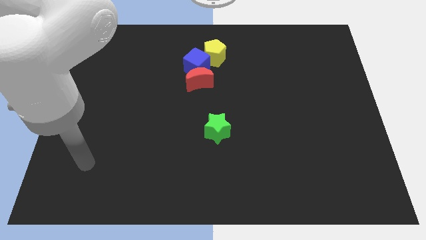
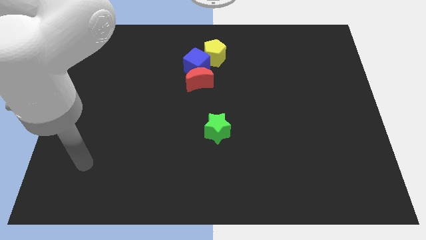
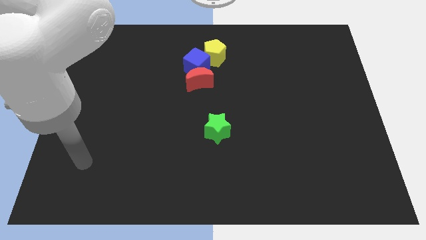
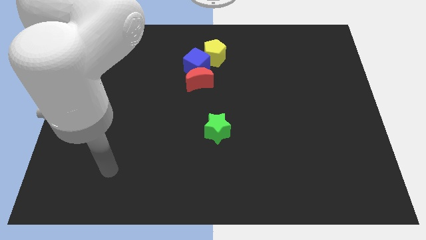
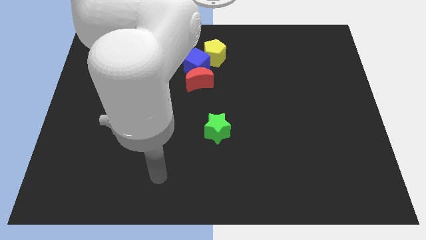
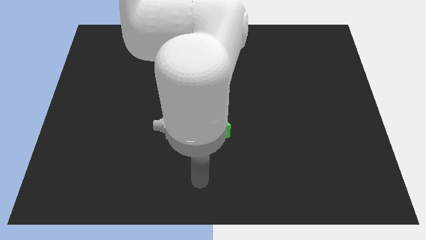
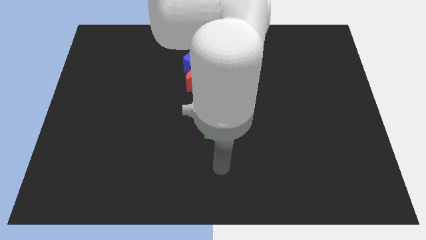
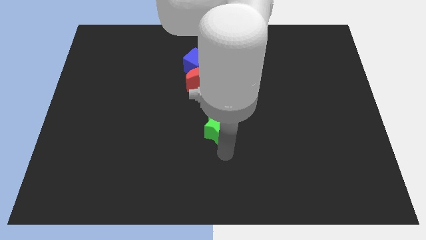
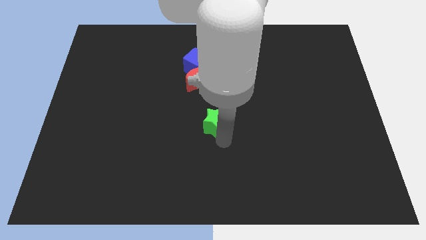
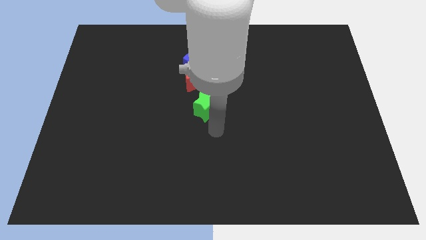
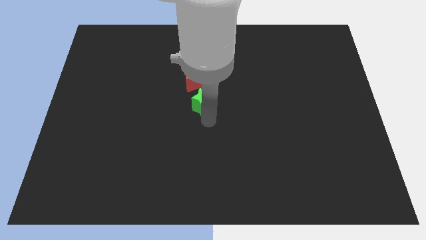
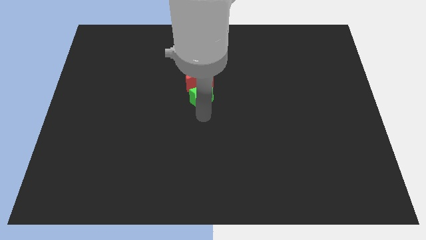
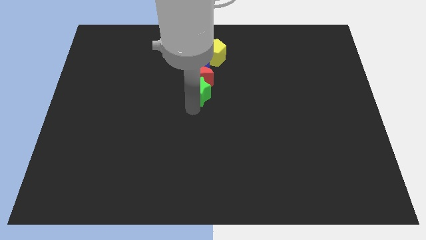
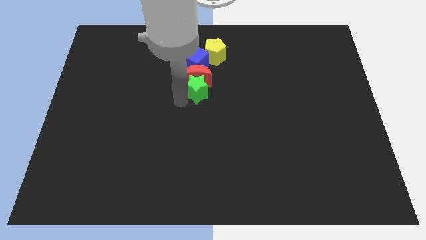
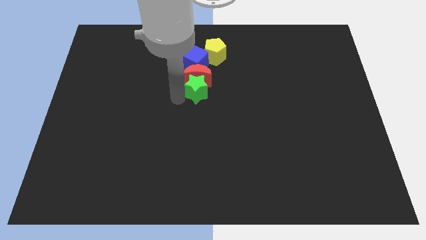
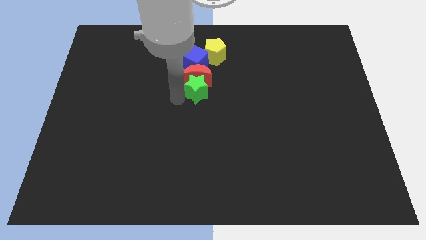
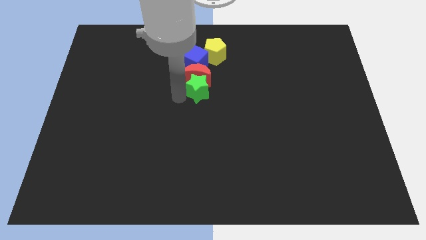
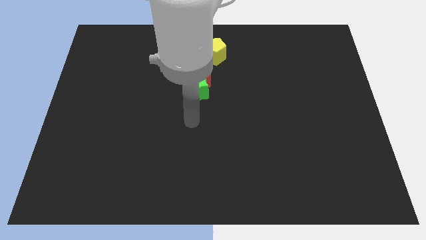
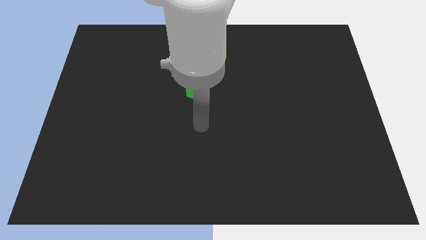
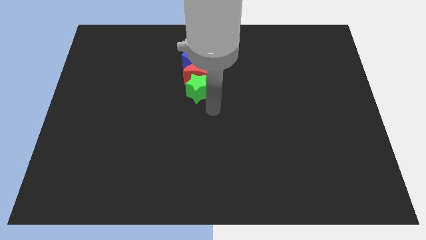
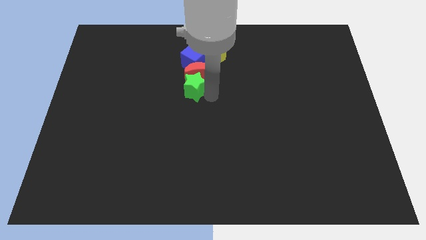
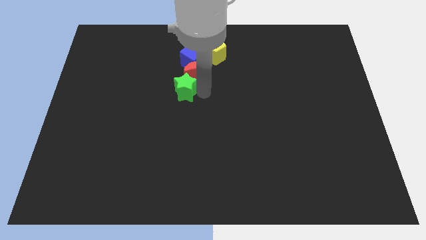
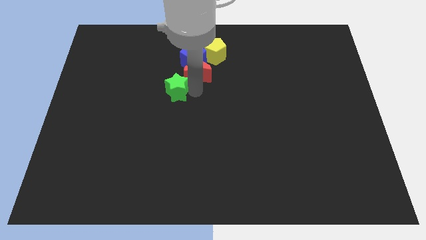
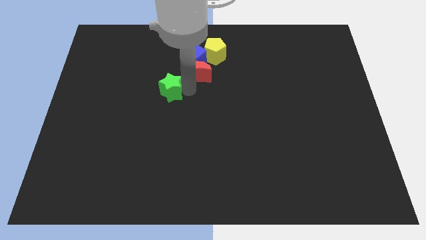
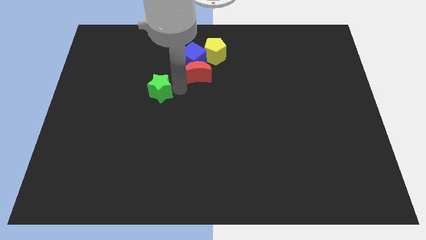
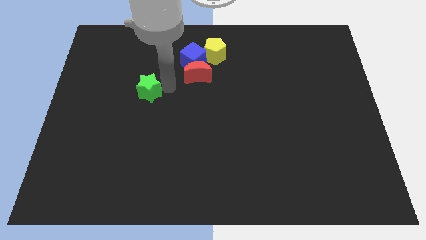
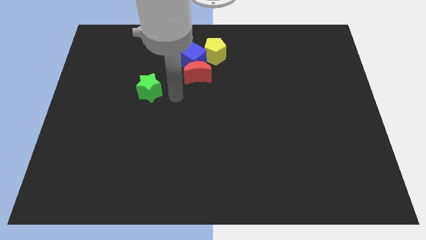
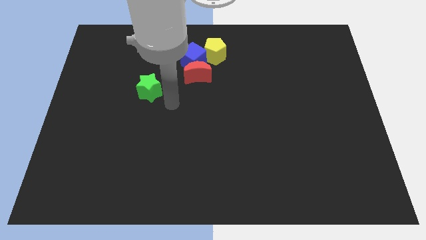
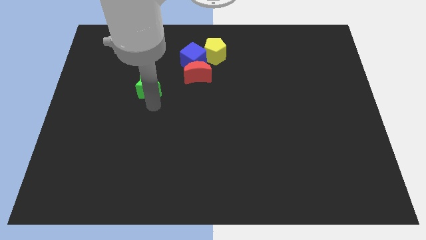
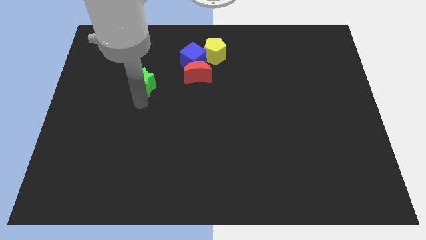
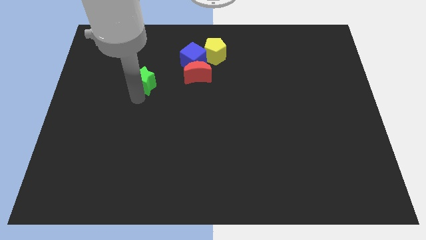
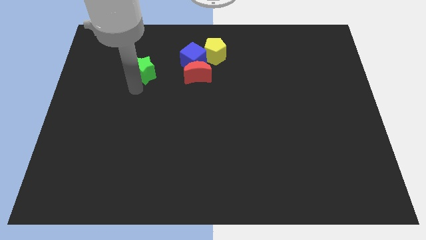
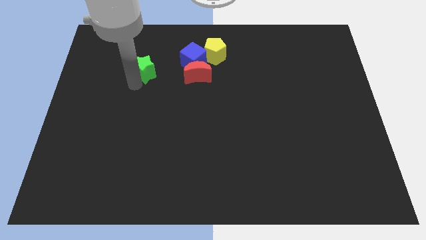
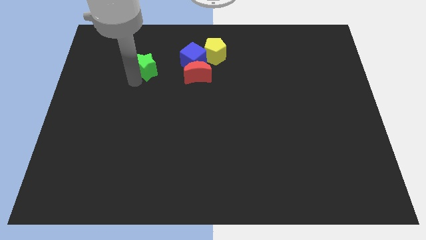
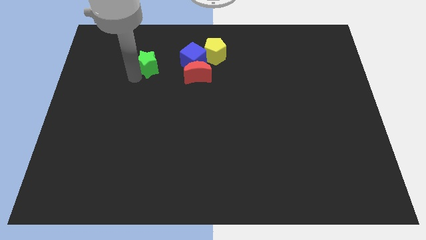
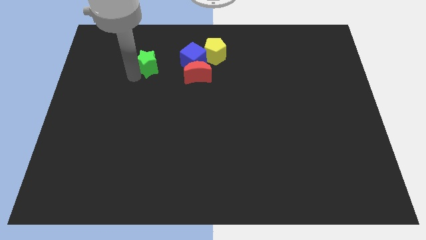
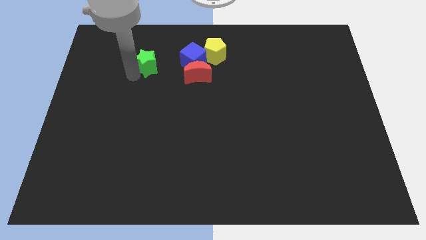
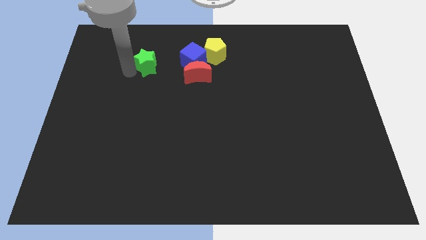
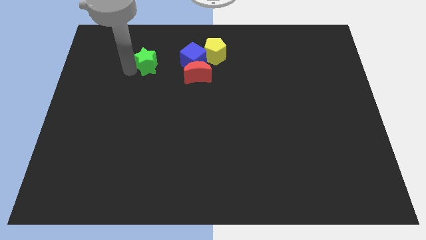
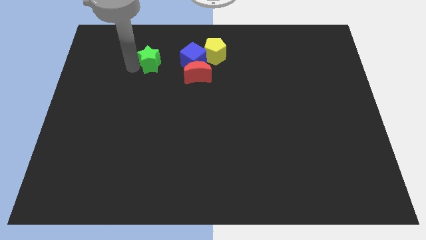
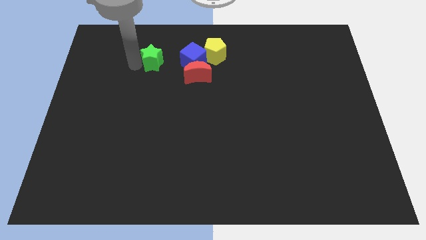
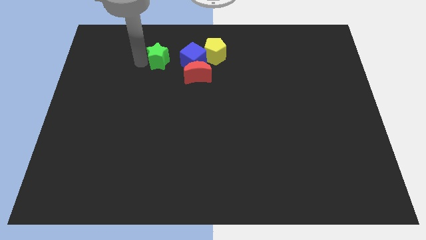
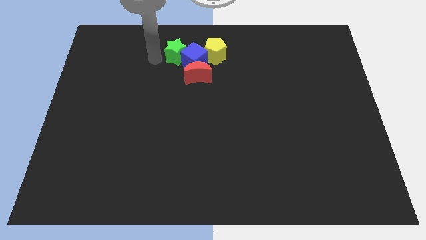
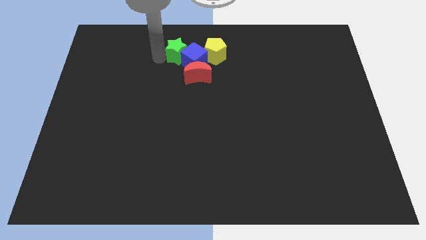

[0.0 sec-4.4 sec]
move the green block to the cube

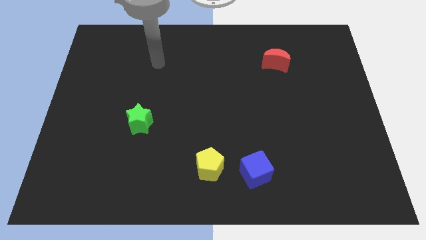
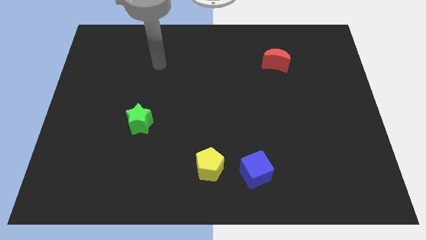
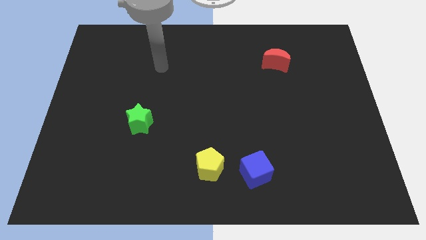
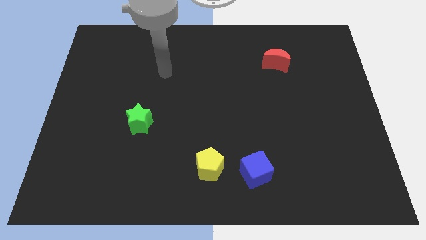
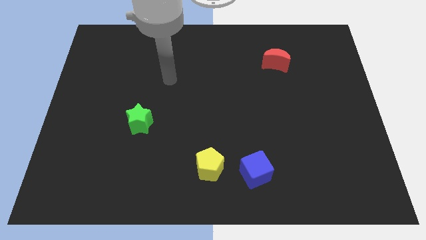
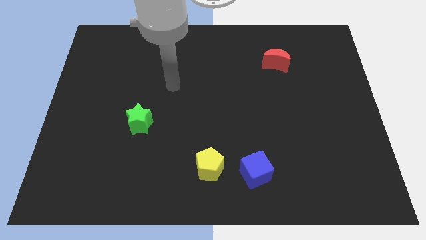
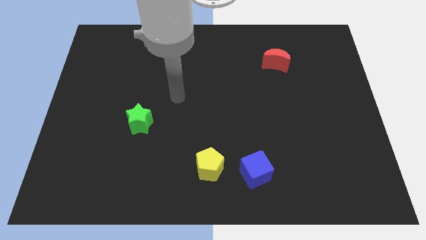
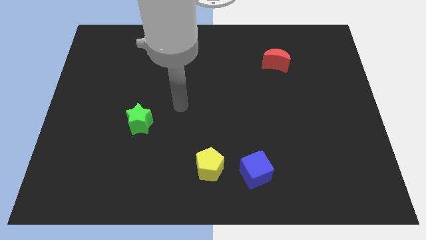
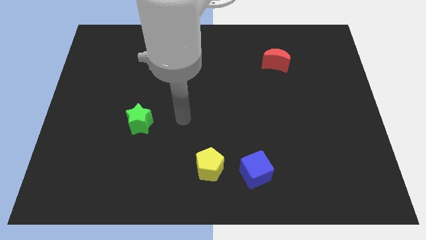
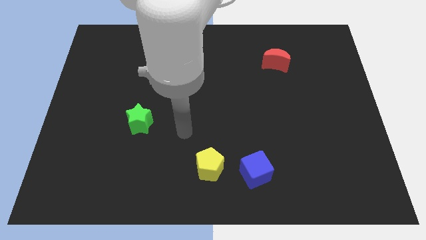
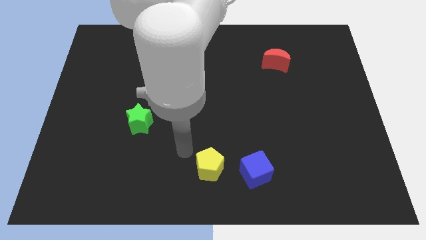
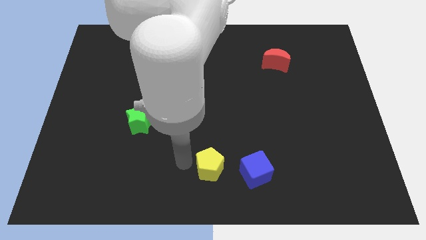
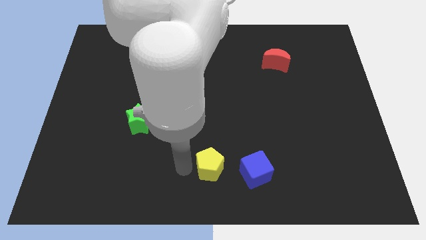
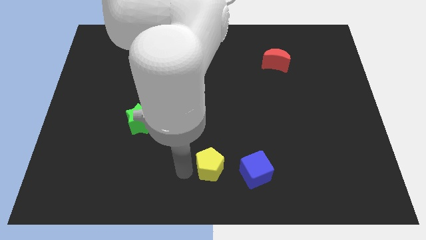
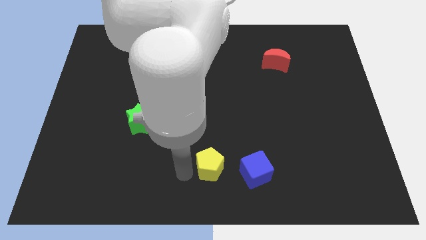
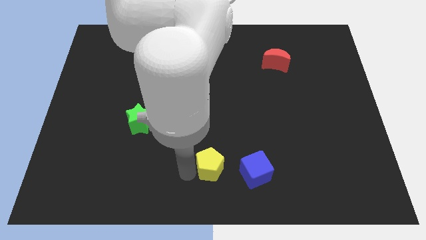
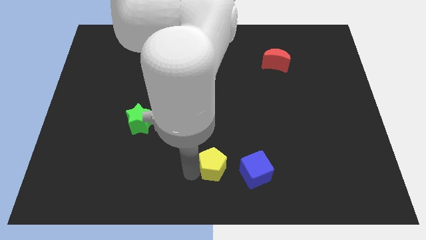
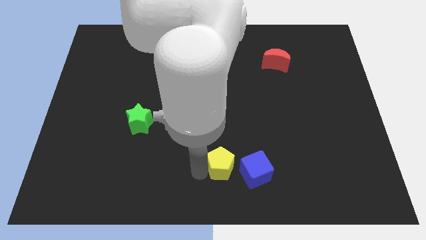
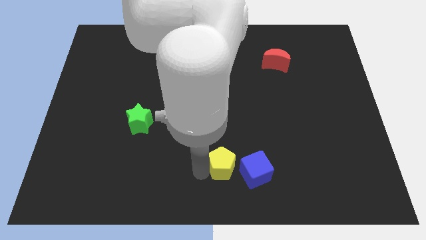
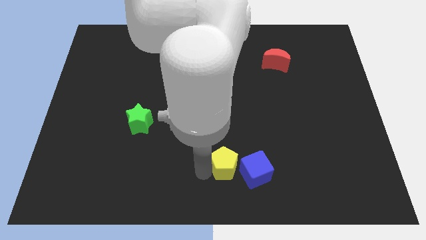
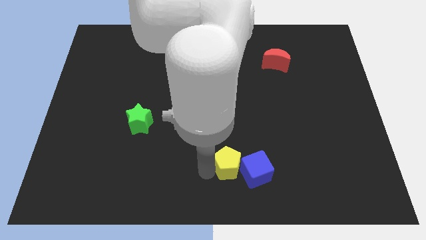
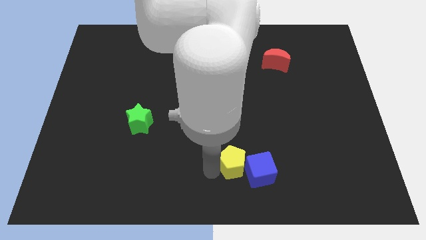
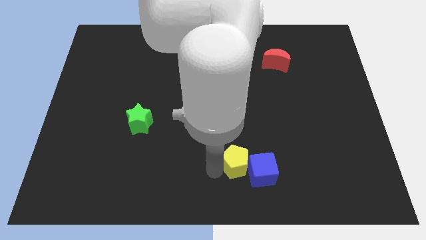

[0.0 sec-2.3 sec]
slide the pentagon towards the blue cube

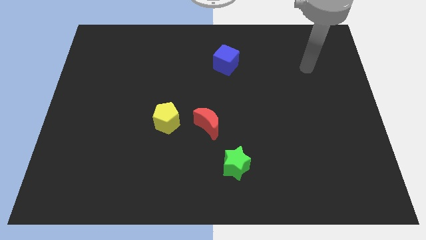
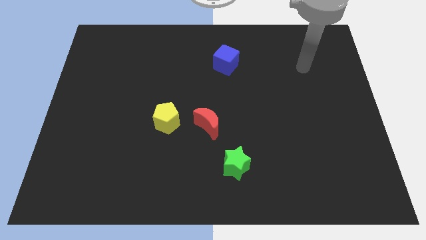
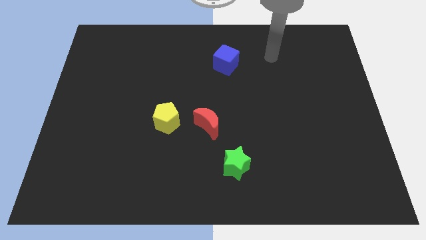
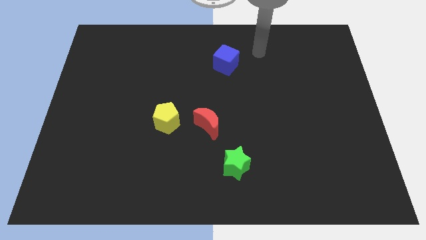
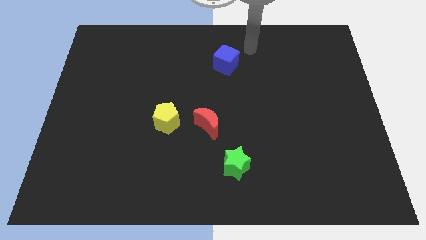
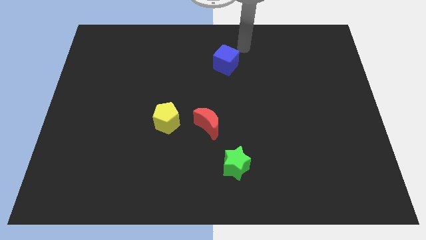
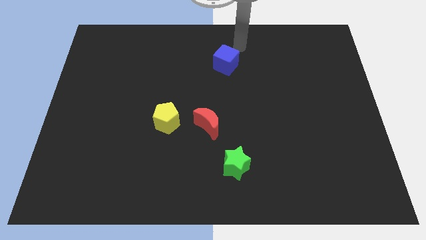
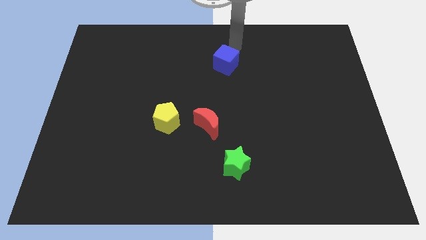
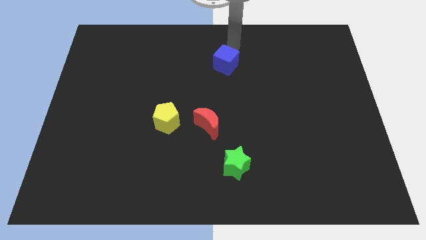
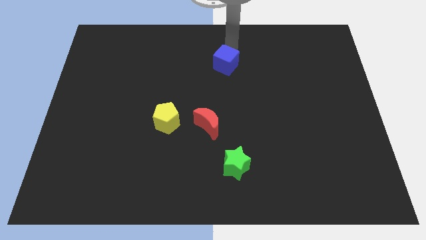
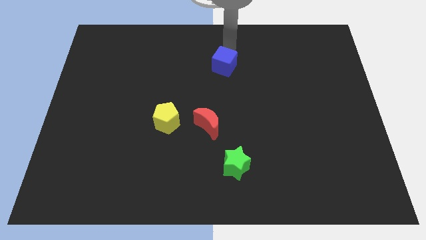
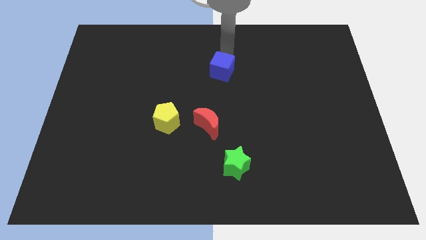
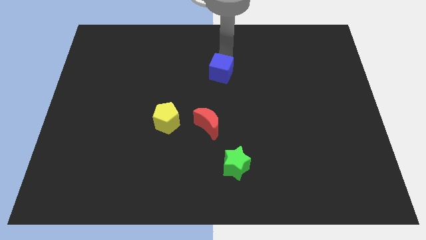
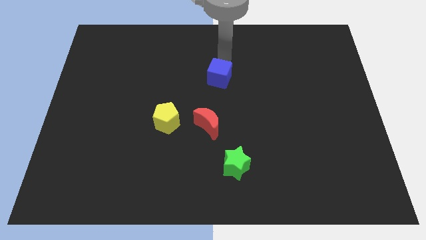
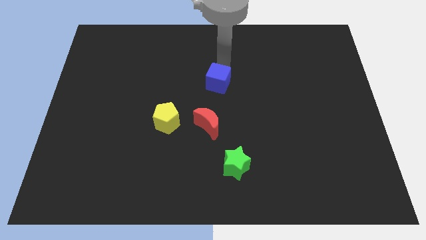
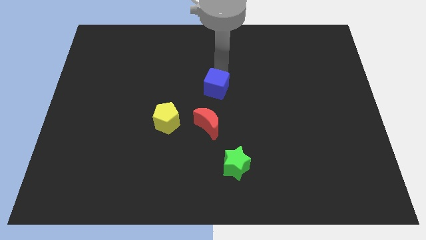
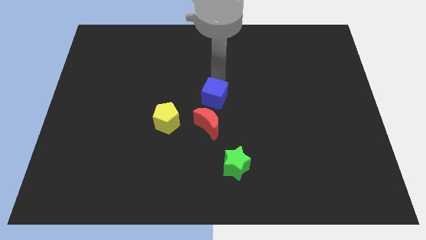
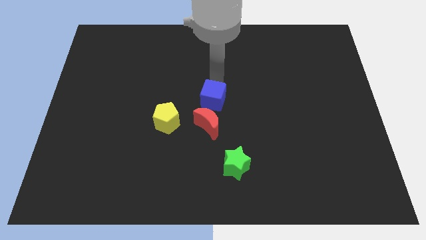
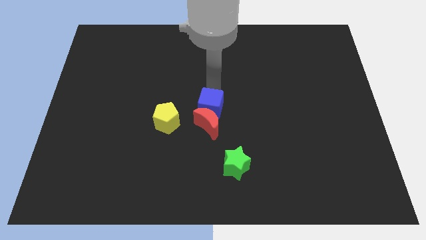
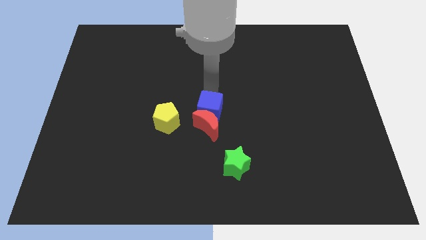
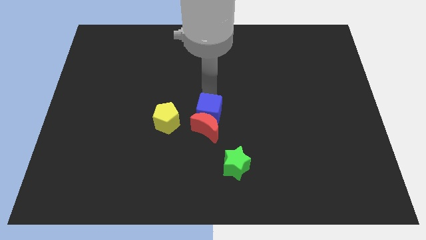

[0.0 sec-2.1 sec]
move the blue block close to the red moon
